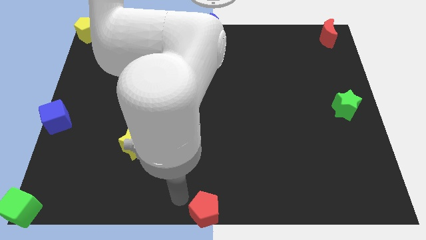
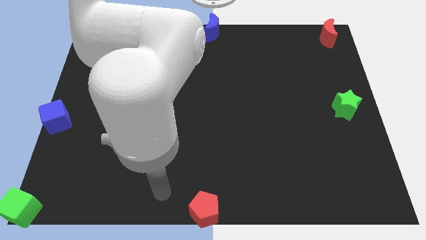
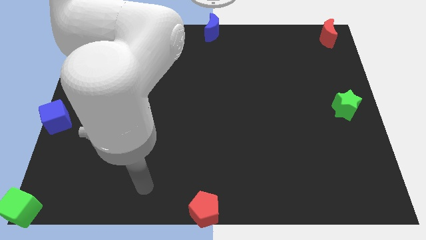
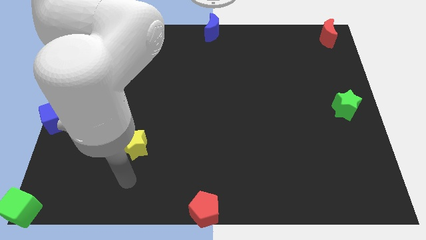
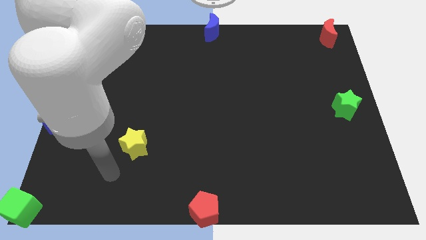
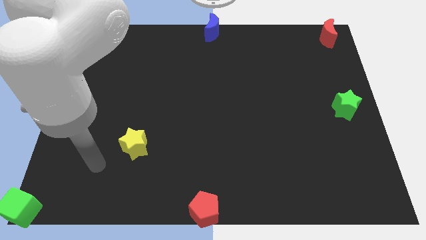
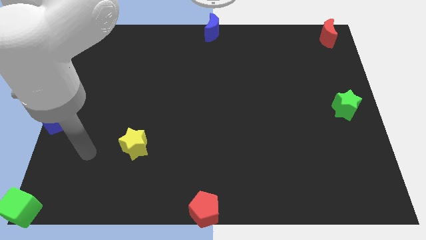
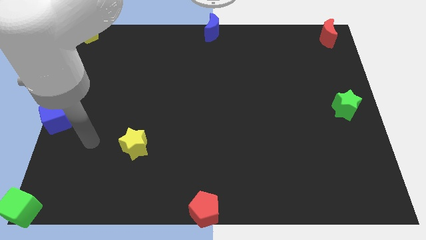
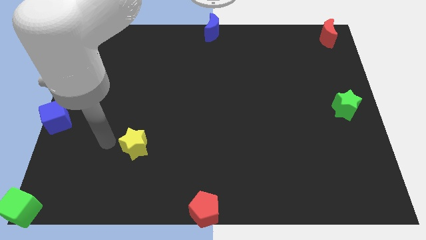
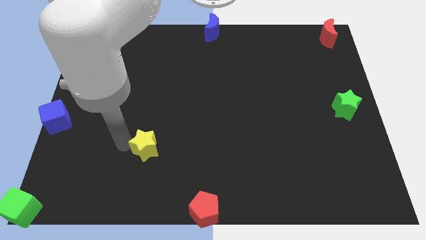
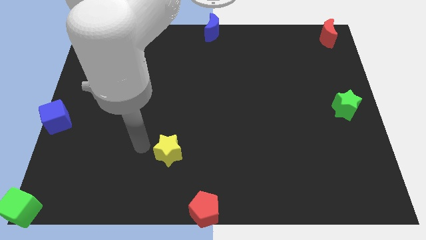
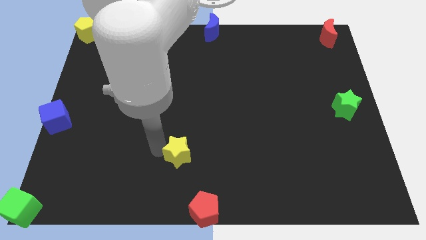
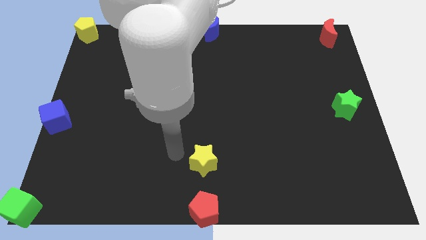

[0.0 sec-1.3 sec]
push yellow star below red pentagon

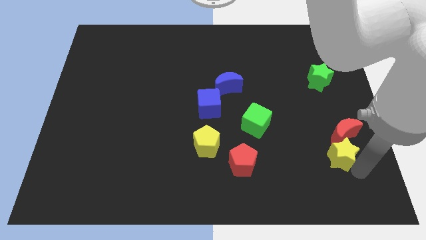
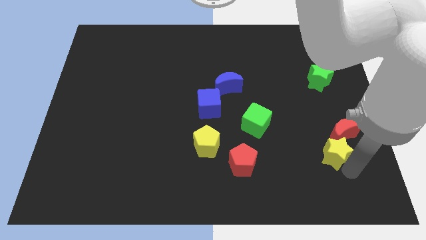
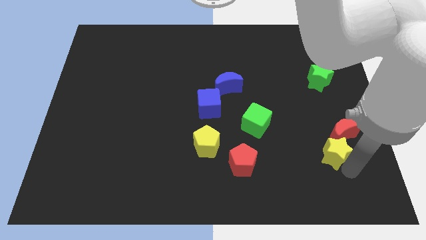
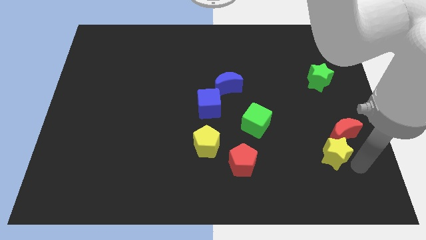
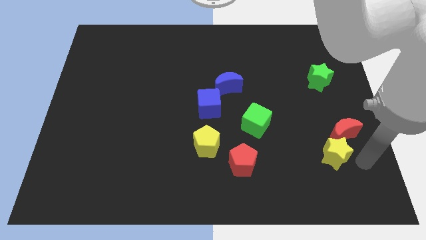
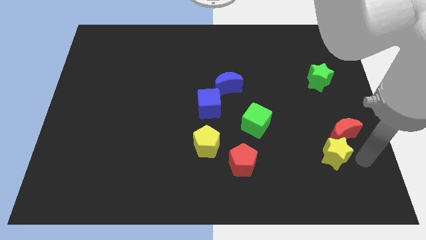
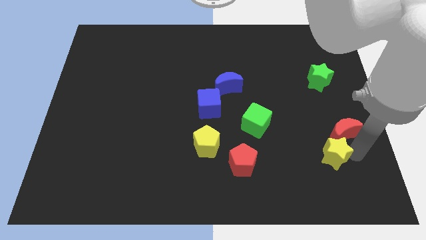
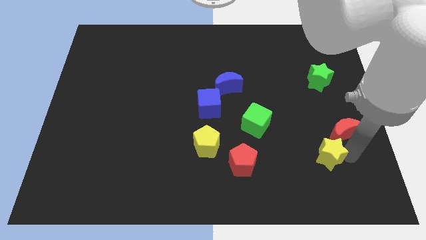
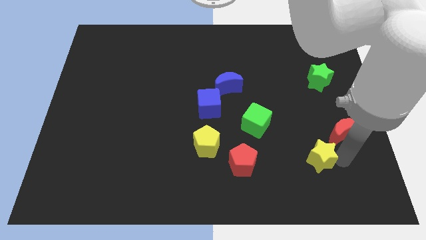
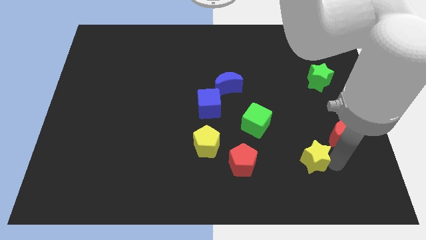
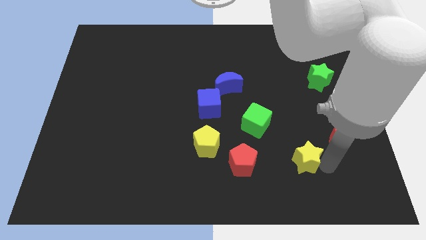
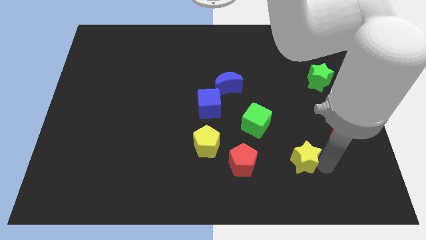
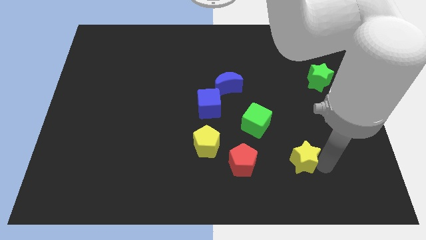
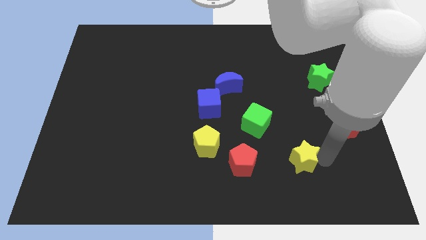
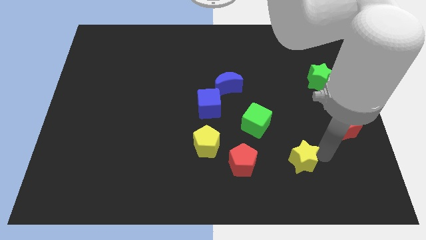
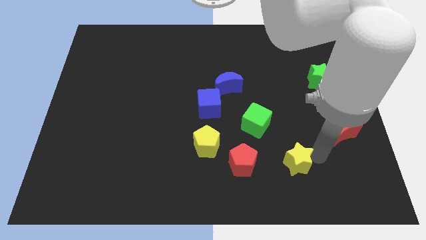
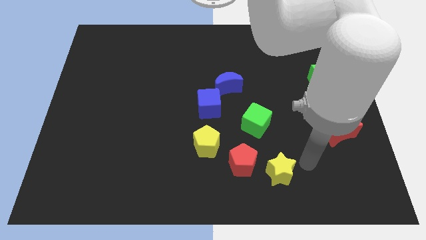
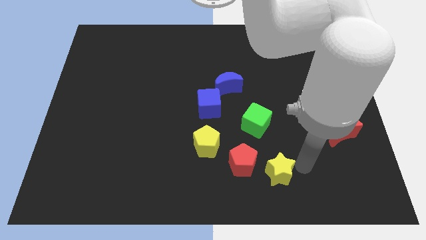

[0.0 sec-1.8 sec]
push the yellow star towards the red pentagon

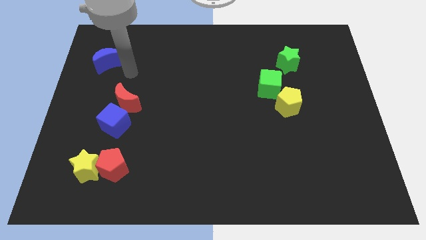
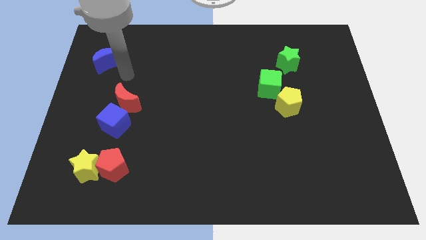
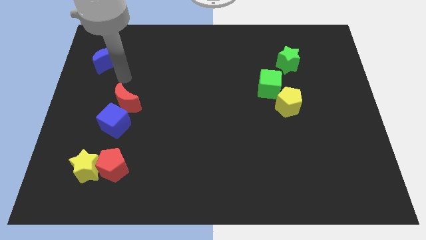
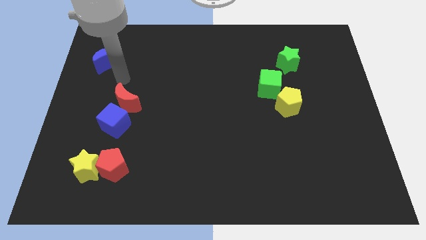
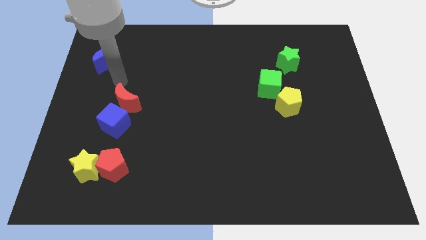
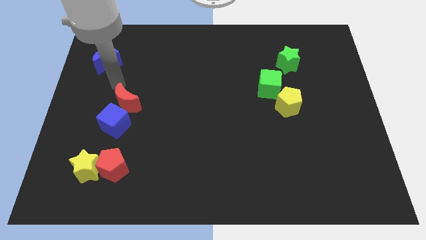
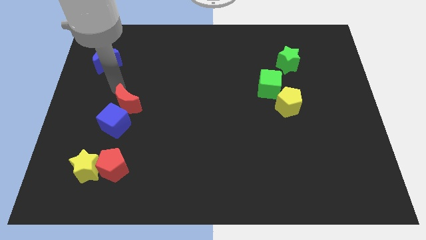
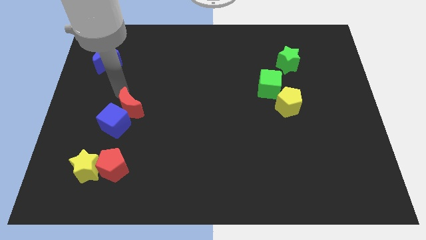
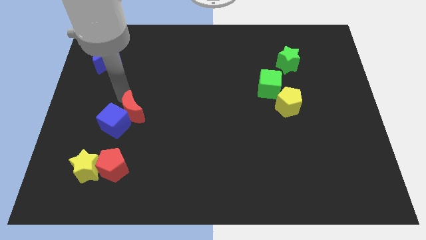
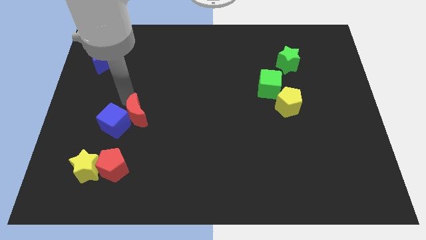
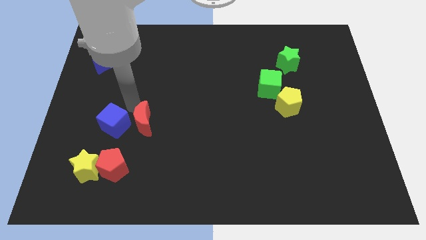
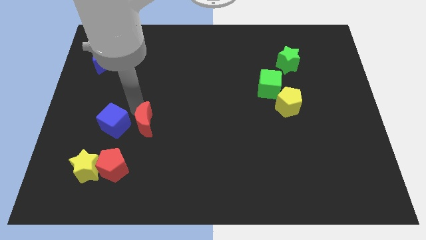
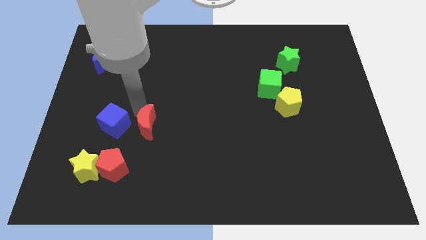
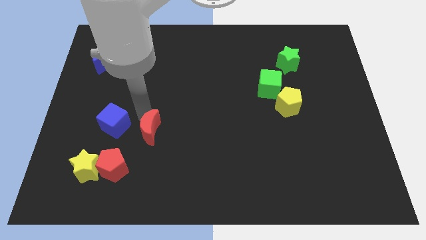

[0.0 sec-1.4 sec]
push the red crescent to the right of the blue cube

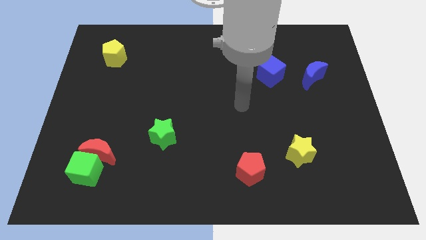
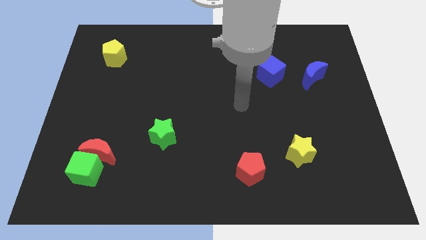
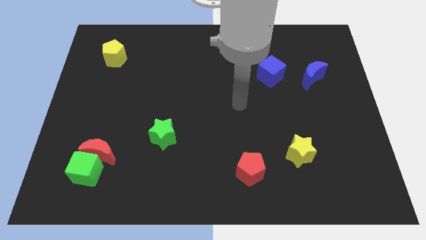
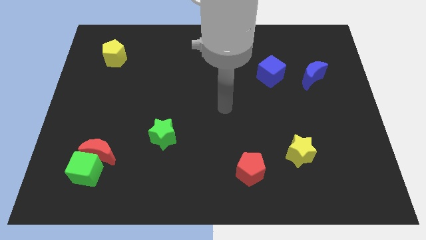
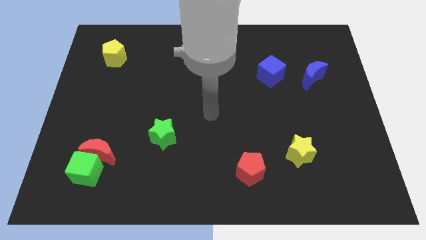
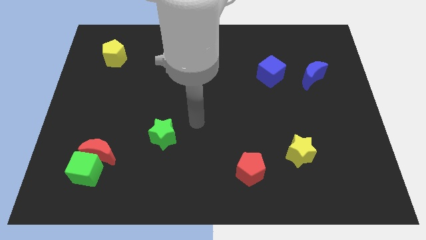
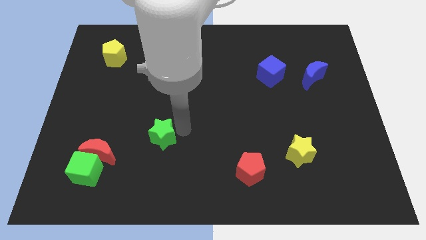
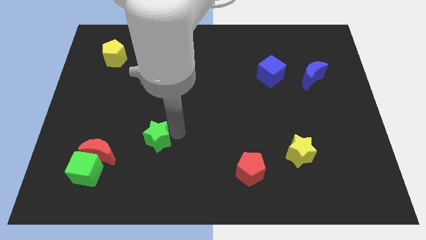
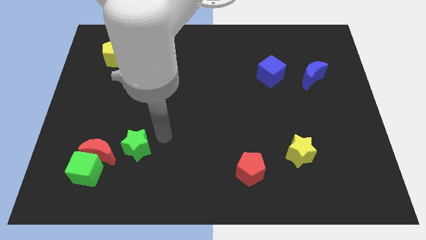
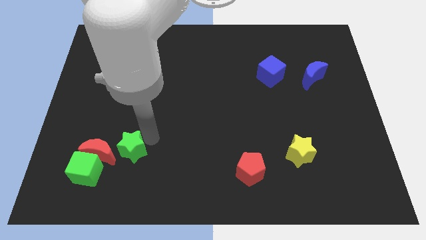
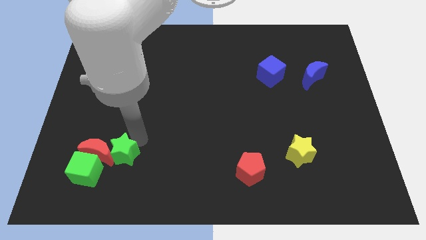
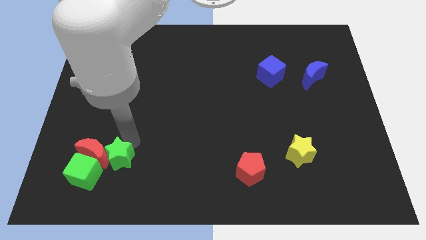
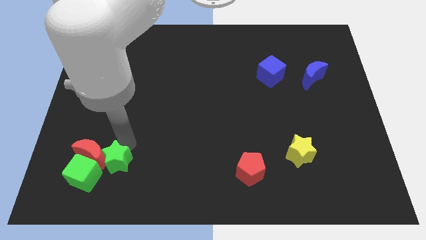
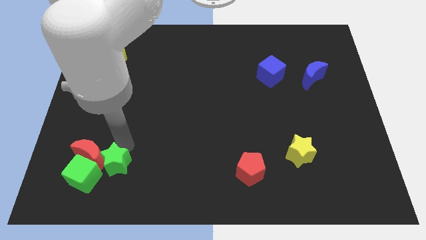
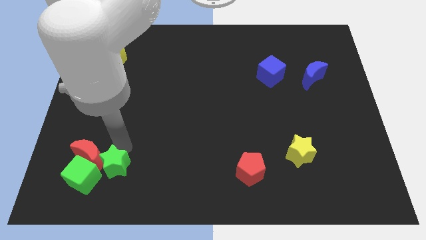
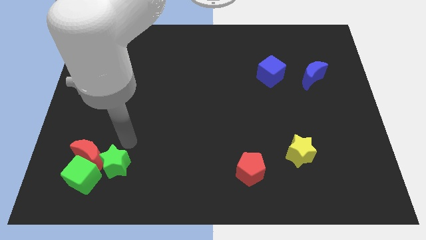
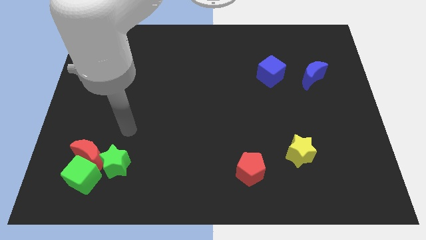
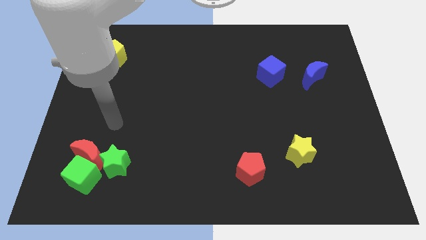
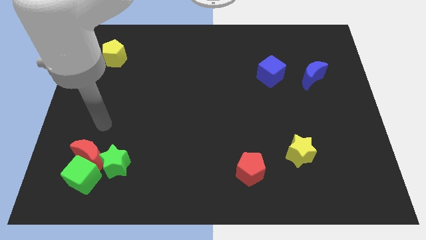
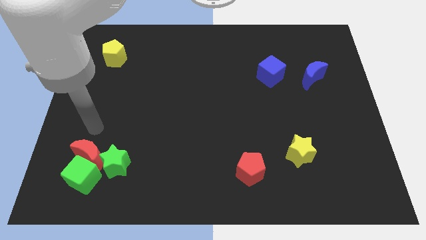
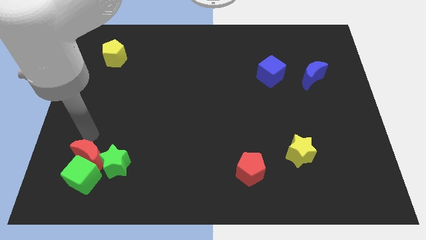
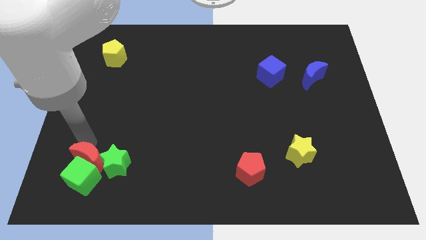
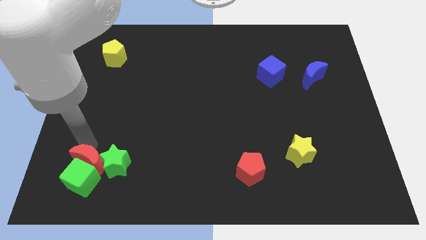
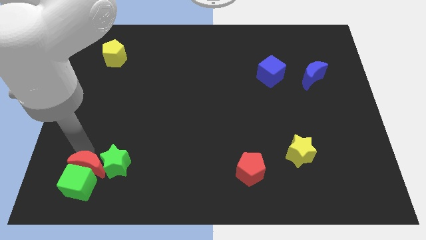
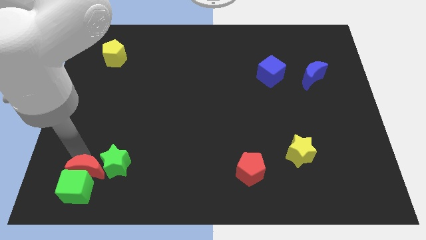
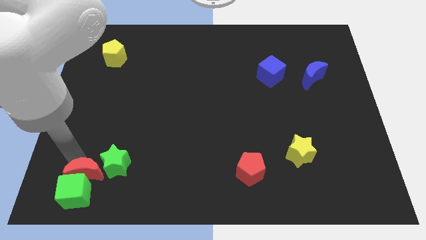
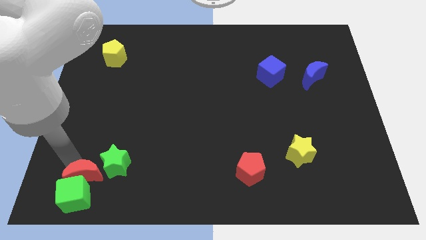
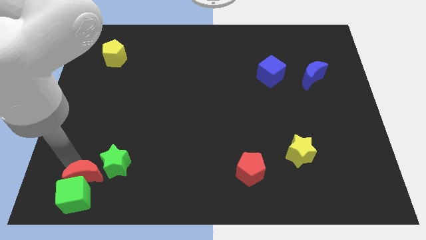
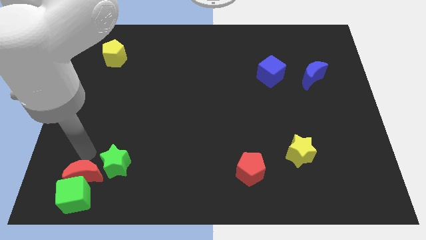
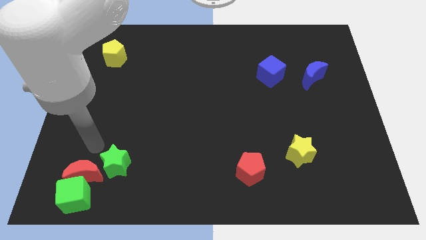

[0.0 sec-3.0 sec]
push the red crescent and the green cube to the bottom left

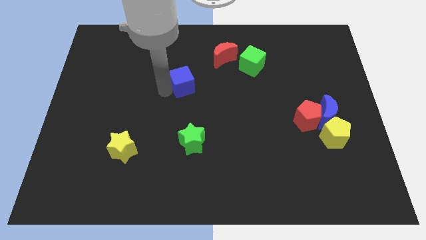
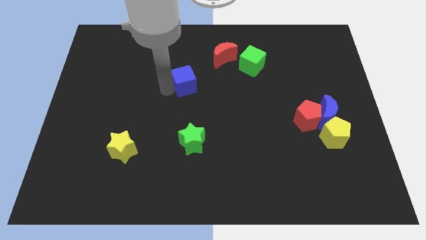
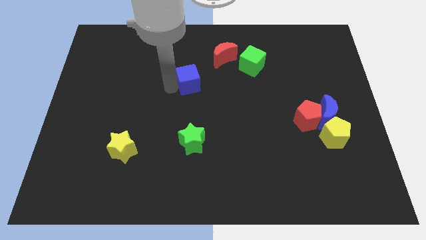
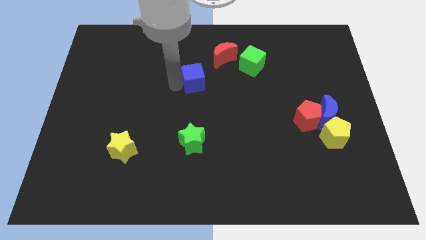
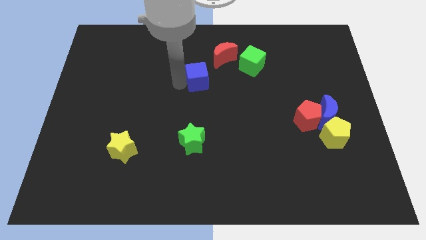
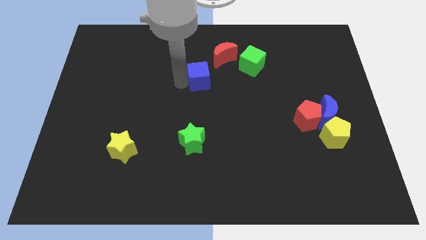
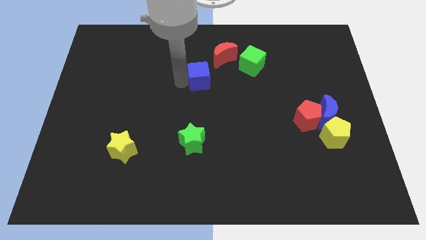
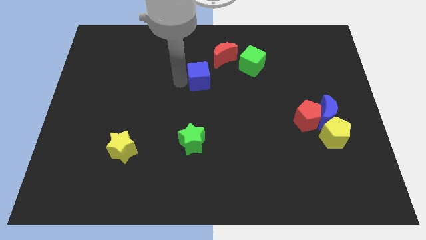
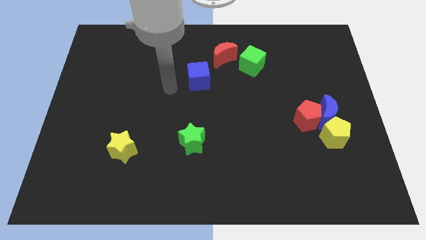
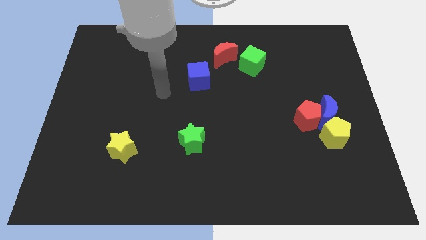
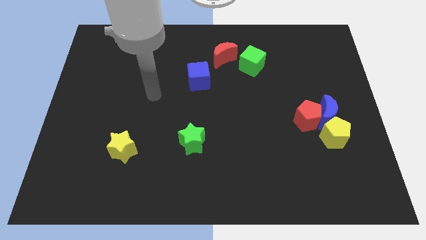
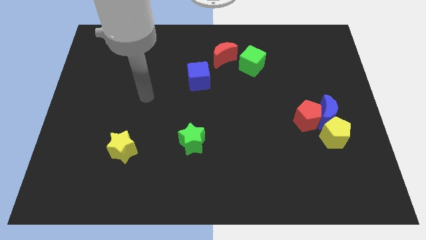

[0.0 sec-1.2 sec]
place the blue cube to the bottom left side of the red crescent

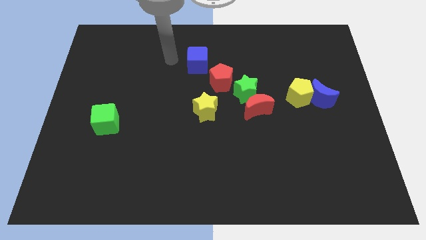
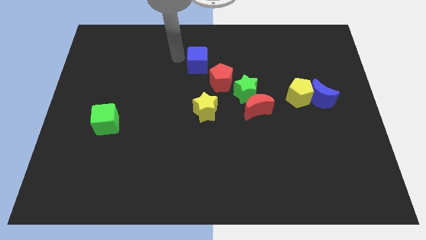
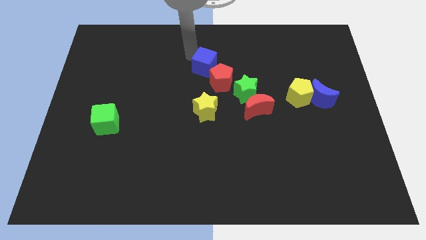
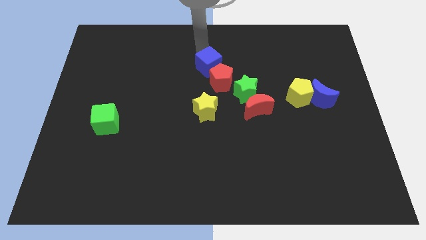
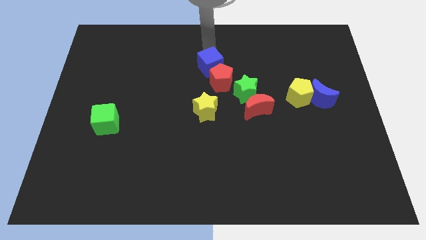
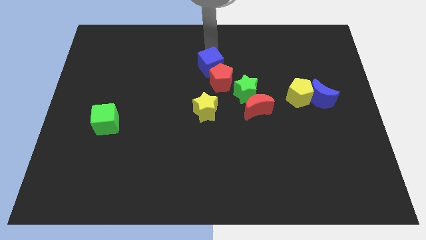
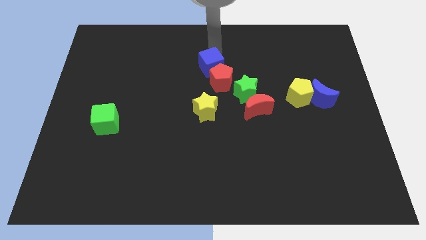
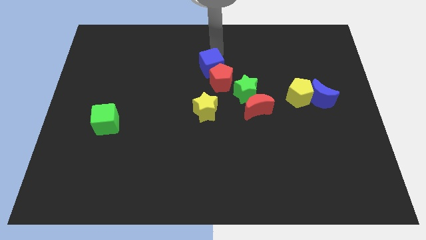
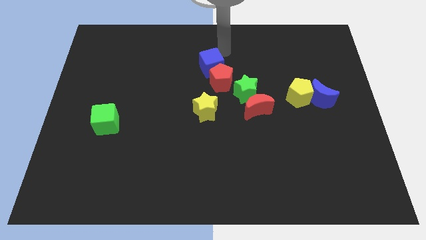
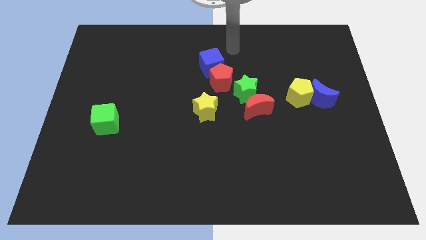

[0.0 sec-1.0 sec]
place the blue cube to the top left side of the red pentagon
